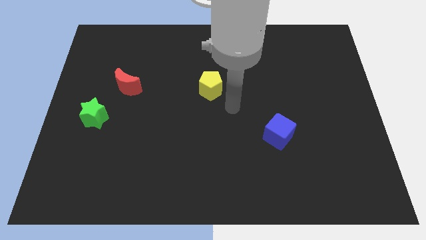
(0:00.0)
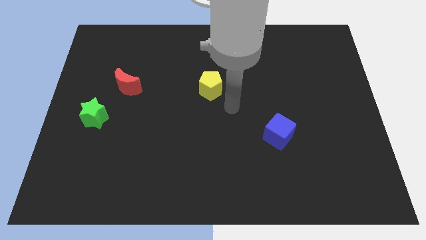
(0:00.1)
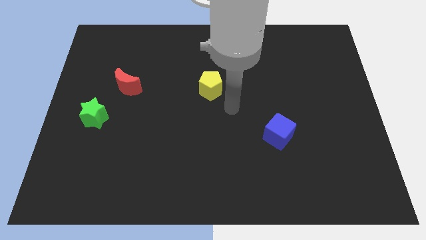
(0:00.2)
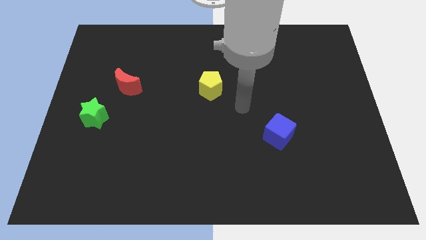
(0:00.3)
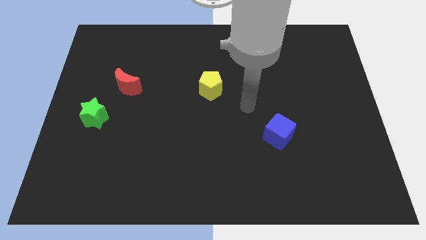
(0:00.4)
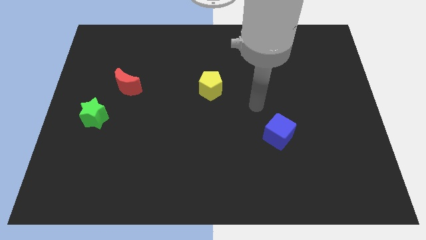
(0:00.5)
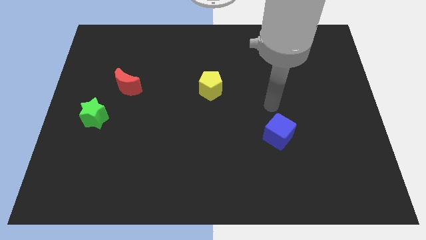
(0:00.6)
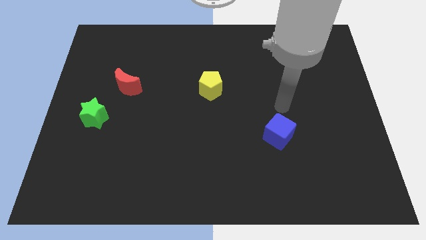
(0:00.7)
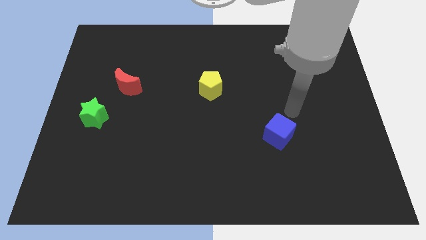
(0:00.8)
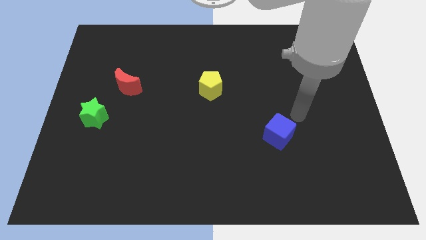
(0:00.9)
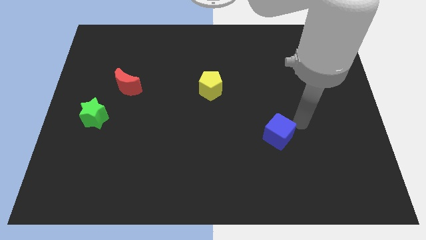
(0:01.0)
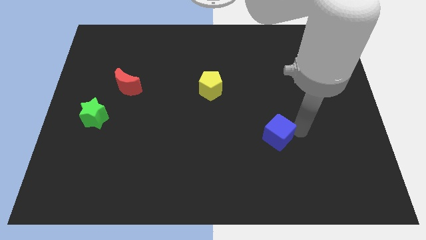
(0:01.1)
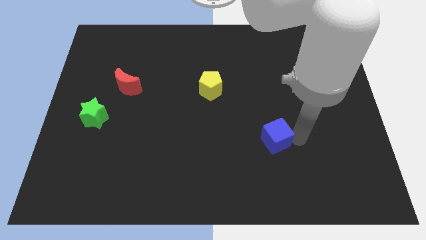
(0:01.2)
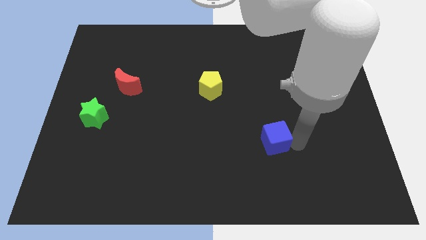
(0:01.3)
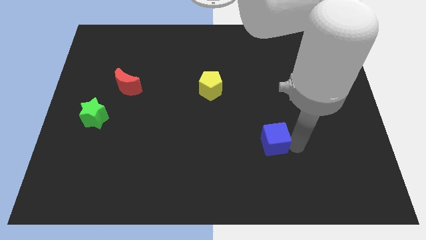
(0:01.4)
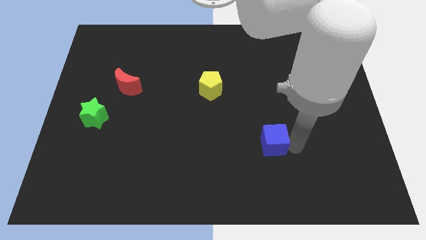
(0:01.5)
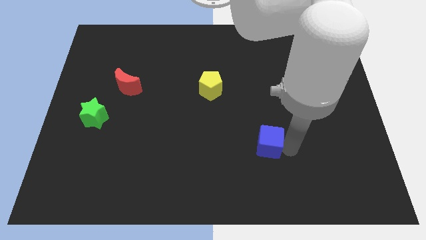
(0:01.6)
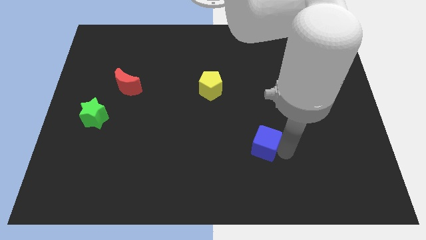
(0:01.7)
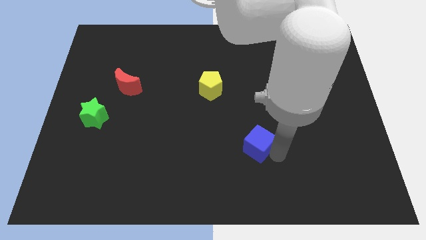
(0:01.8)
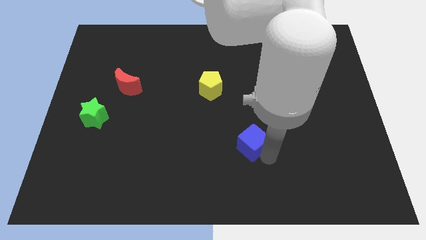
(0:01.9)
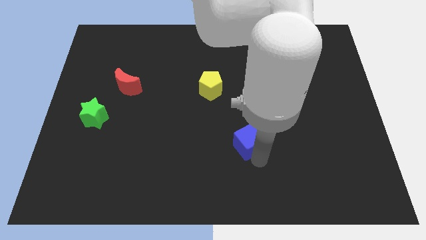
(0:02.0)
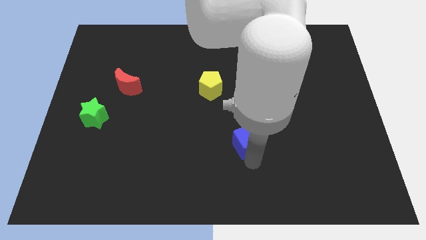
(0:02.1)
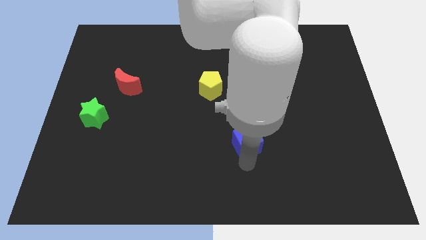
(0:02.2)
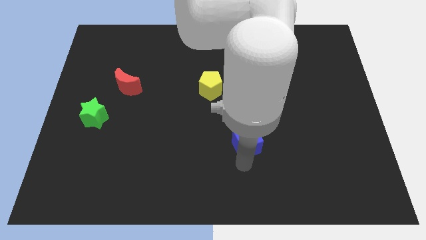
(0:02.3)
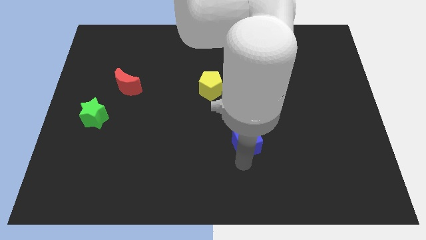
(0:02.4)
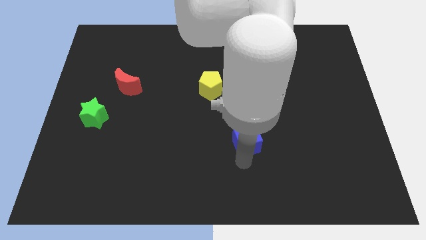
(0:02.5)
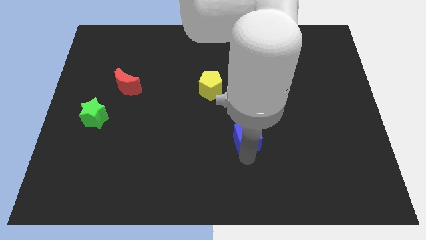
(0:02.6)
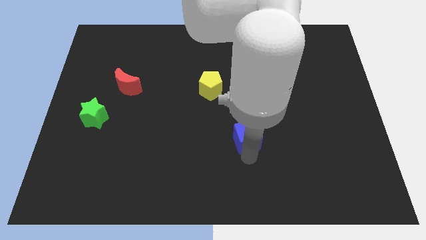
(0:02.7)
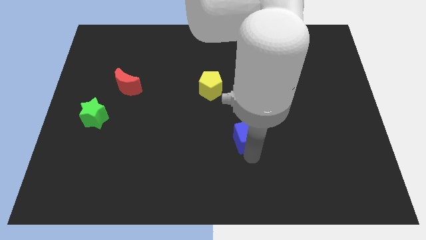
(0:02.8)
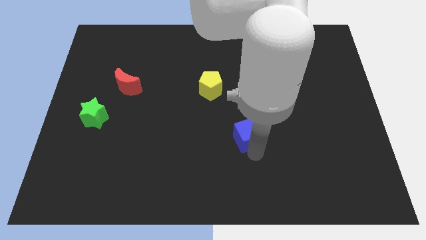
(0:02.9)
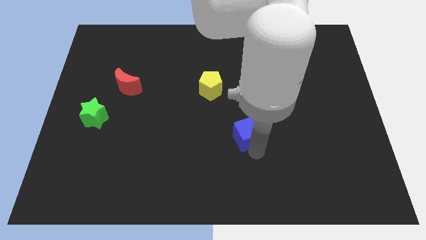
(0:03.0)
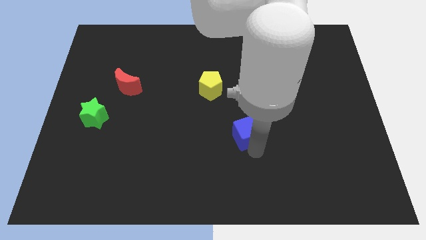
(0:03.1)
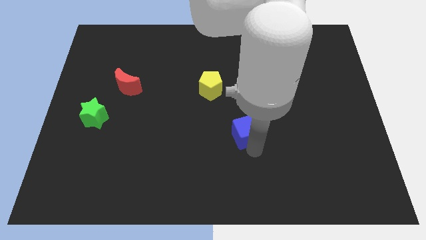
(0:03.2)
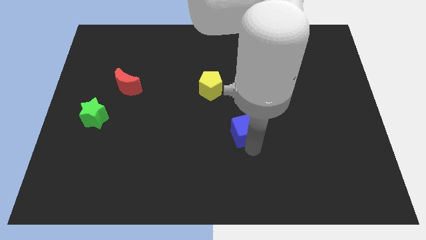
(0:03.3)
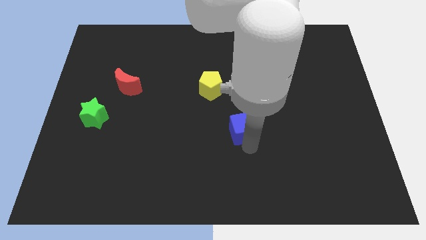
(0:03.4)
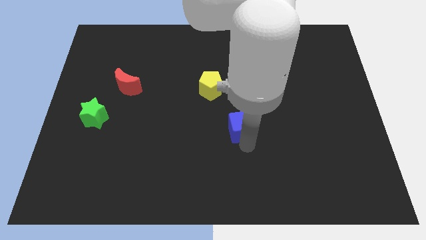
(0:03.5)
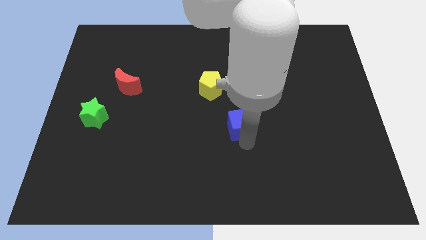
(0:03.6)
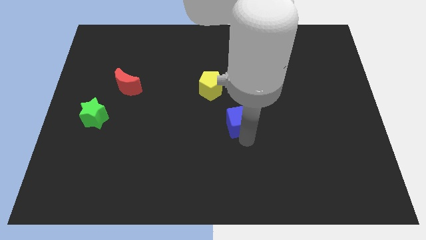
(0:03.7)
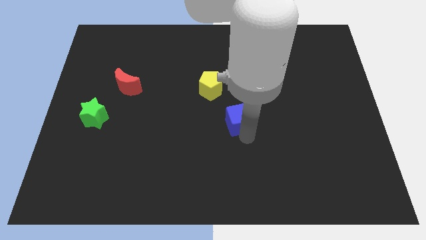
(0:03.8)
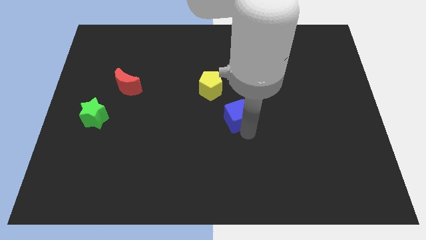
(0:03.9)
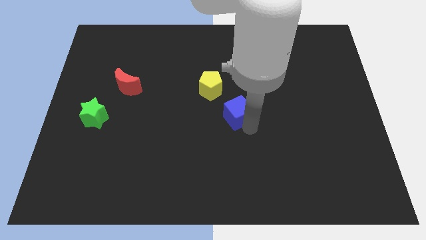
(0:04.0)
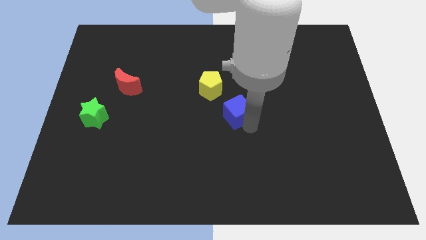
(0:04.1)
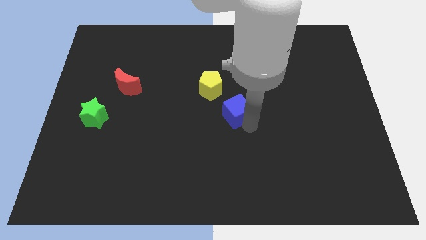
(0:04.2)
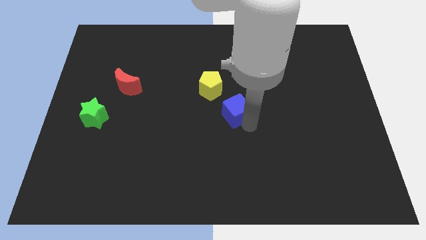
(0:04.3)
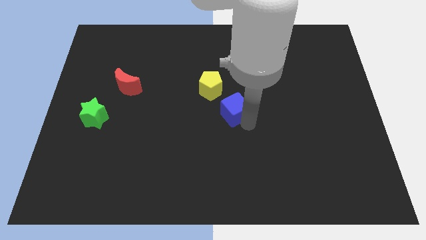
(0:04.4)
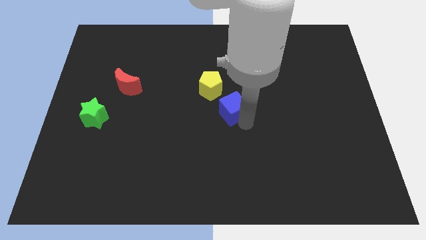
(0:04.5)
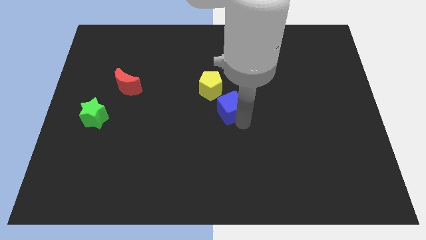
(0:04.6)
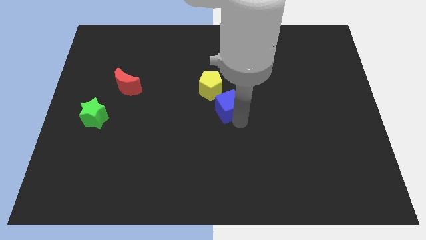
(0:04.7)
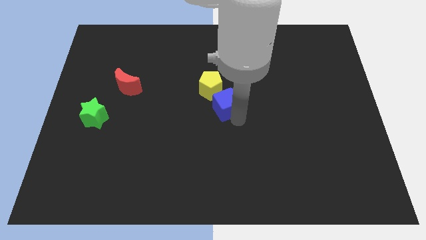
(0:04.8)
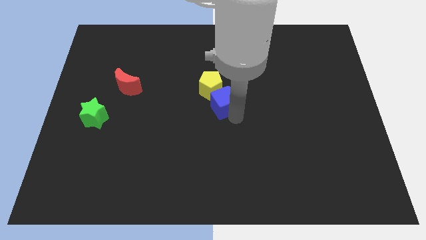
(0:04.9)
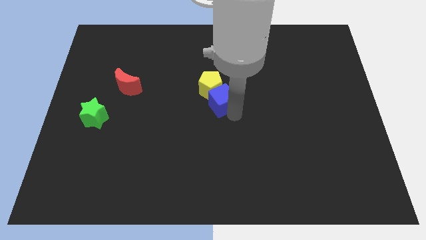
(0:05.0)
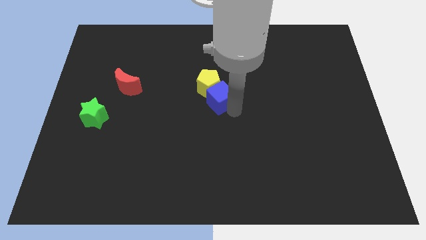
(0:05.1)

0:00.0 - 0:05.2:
push the blue cube next to the pentagon

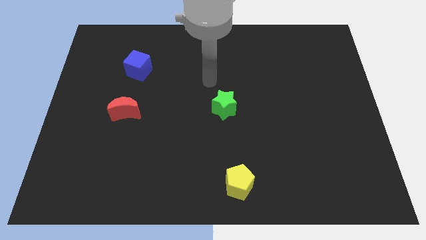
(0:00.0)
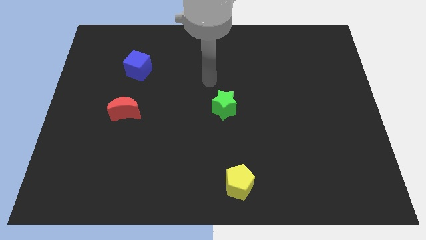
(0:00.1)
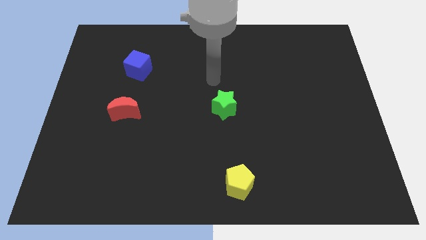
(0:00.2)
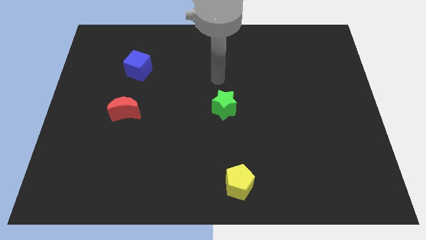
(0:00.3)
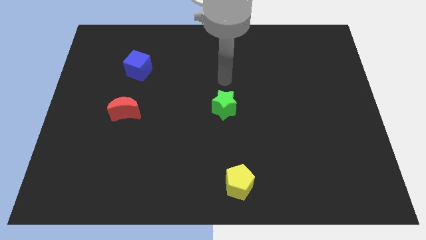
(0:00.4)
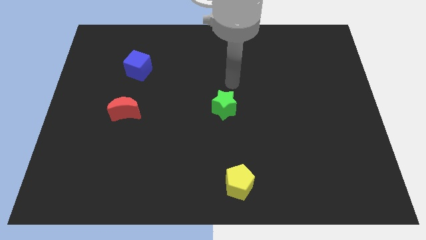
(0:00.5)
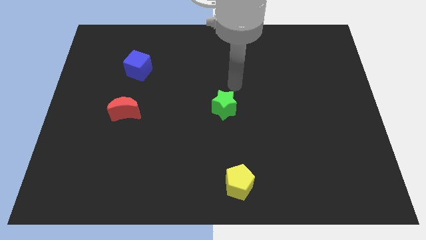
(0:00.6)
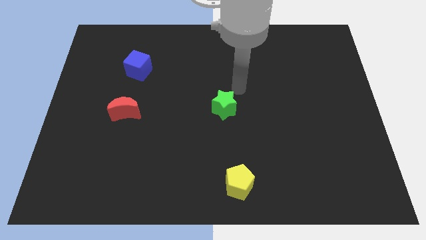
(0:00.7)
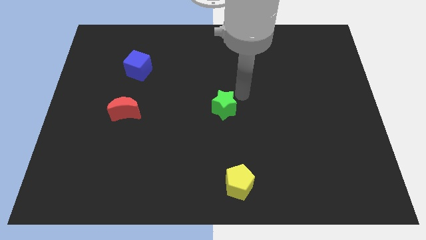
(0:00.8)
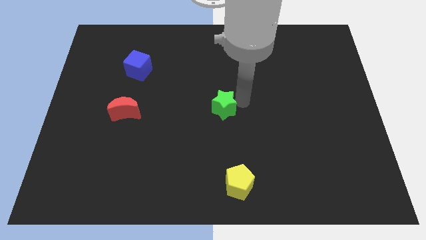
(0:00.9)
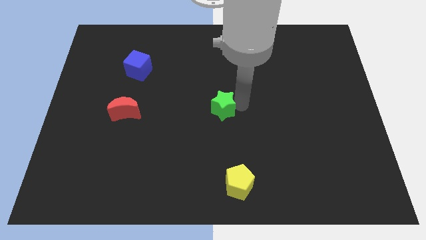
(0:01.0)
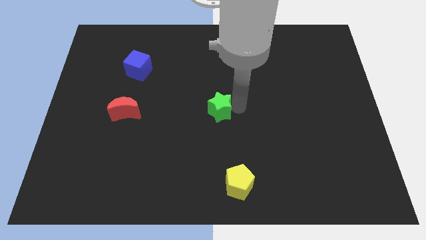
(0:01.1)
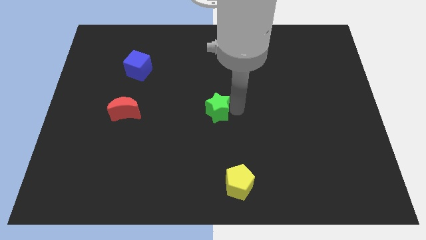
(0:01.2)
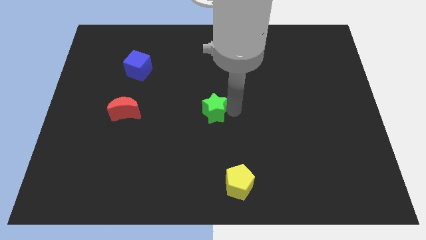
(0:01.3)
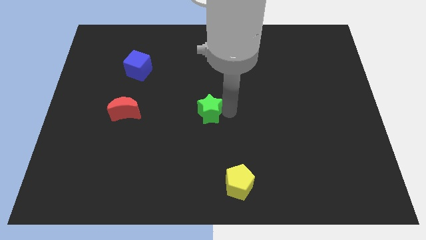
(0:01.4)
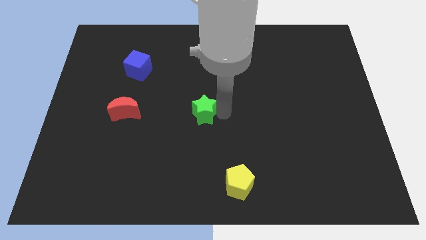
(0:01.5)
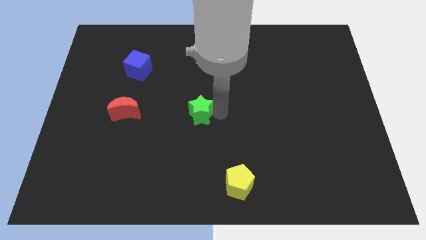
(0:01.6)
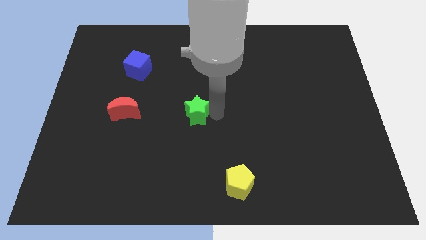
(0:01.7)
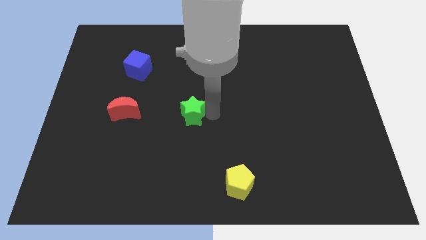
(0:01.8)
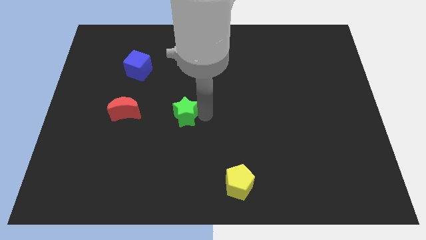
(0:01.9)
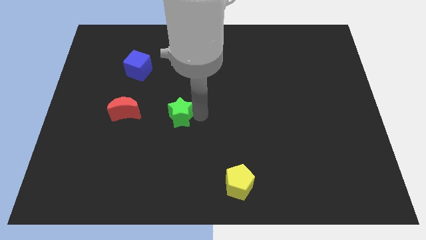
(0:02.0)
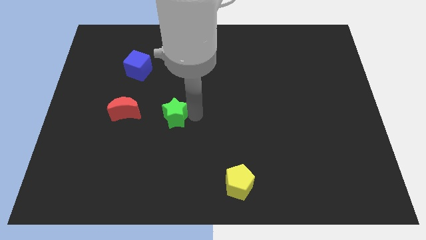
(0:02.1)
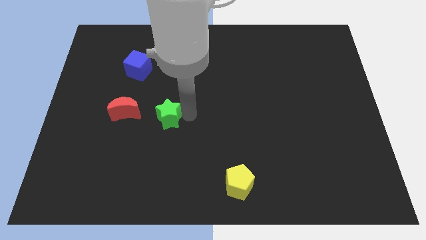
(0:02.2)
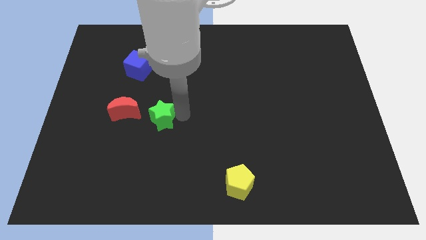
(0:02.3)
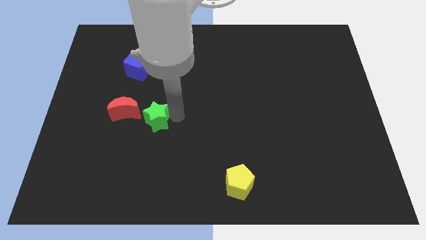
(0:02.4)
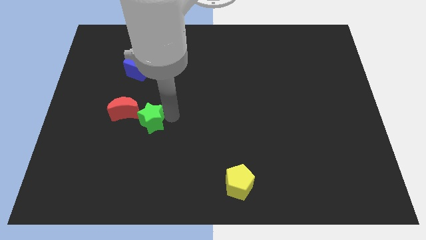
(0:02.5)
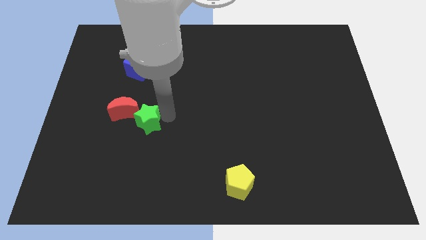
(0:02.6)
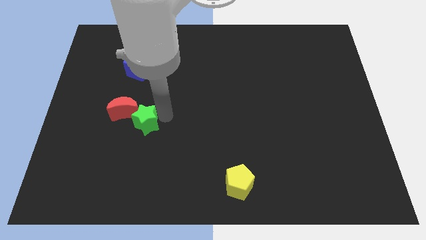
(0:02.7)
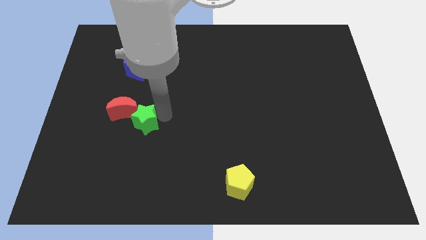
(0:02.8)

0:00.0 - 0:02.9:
slide the green star close to the moon

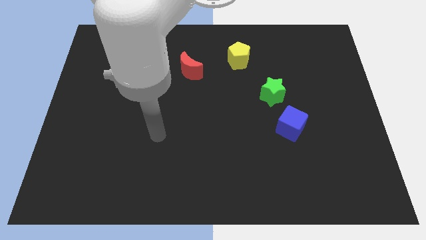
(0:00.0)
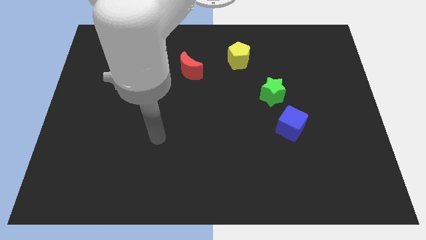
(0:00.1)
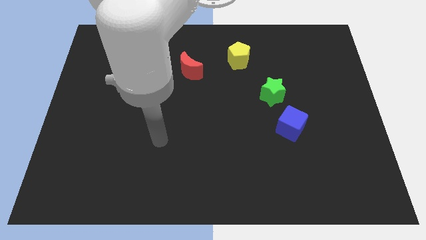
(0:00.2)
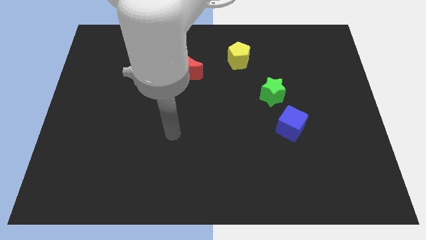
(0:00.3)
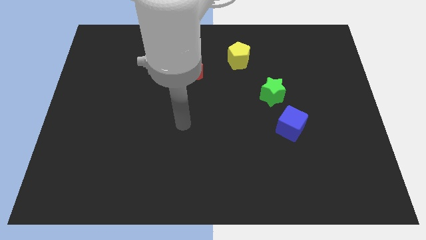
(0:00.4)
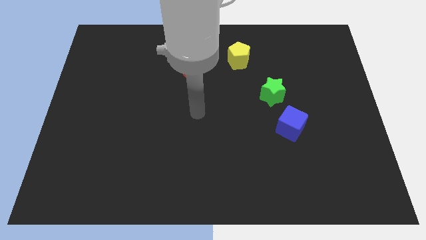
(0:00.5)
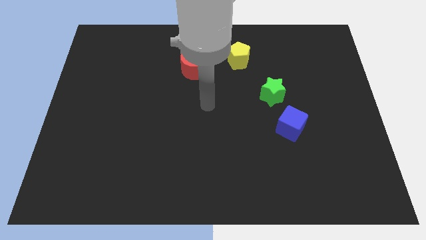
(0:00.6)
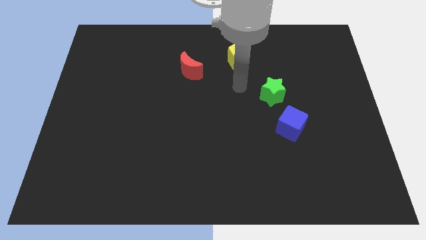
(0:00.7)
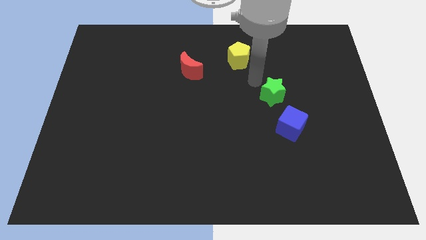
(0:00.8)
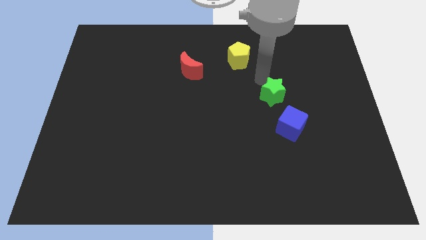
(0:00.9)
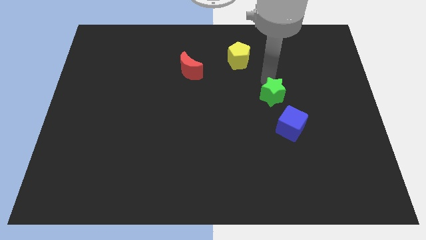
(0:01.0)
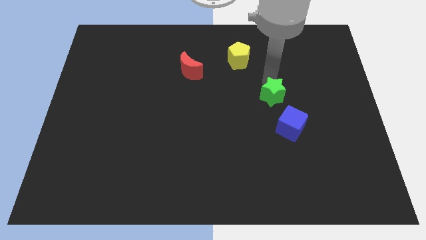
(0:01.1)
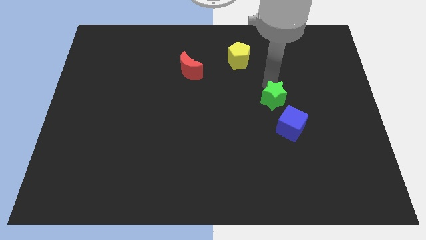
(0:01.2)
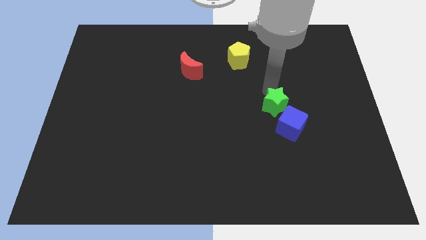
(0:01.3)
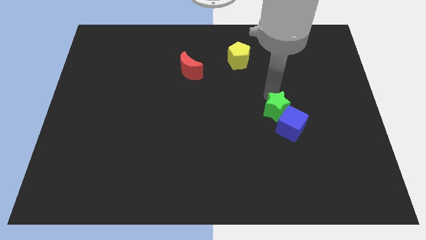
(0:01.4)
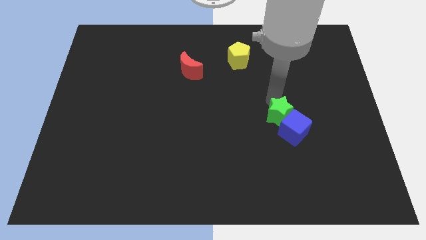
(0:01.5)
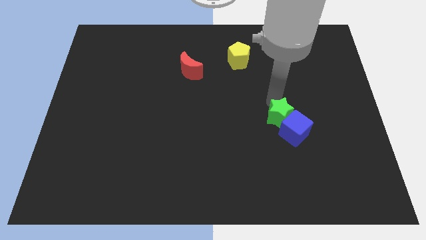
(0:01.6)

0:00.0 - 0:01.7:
put the green block close to the blue block
